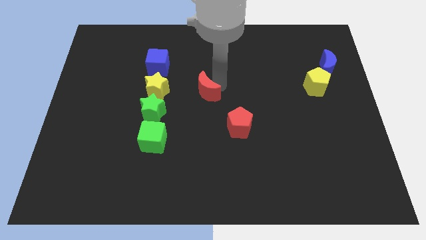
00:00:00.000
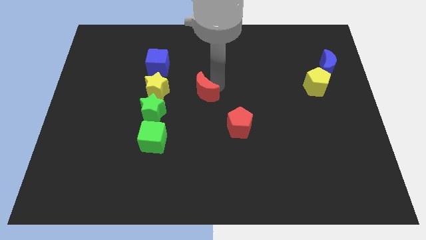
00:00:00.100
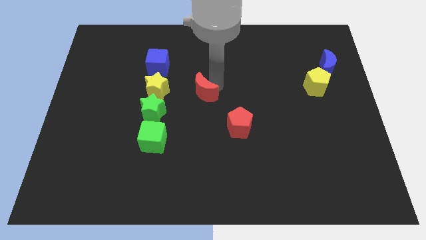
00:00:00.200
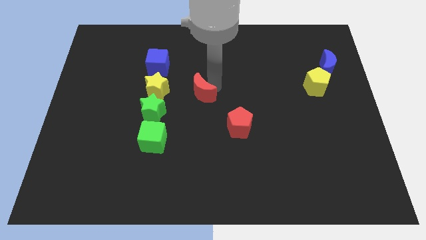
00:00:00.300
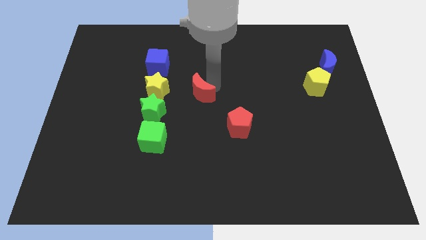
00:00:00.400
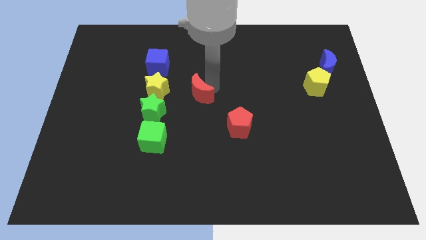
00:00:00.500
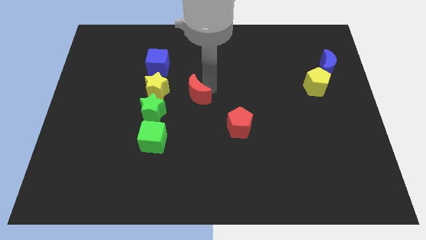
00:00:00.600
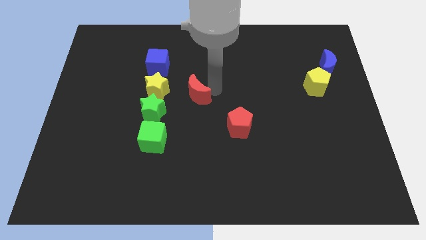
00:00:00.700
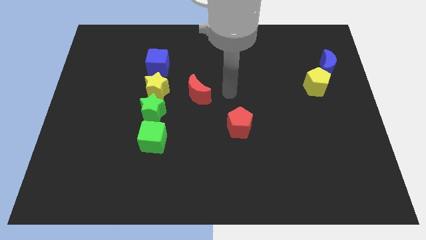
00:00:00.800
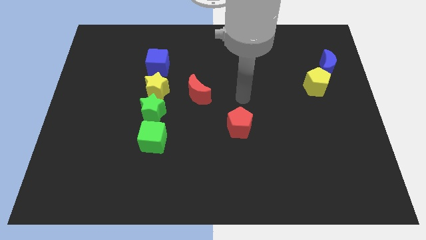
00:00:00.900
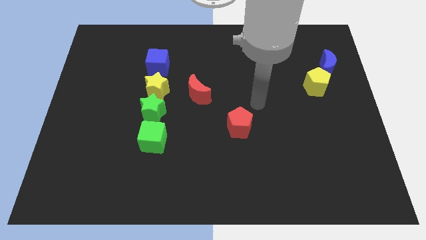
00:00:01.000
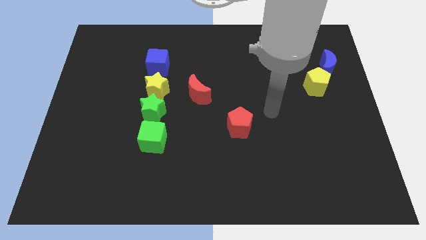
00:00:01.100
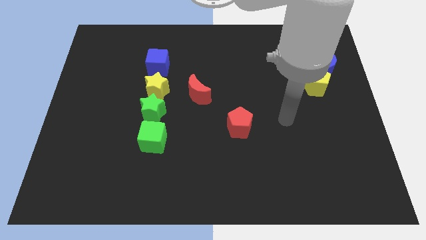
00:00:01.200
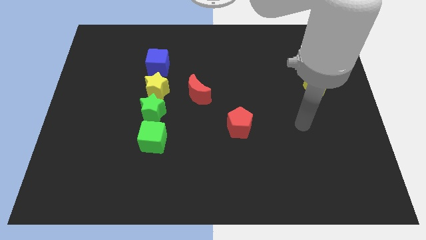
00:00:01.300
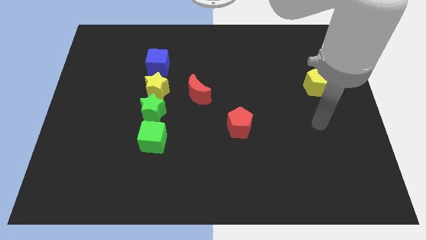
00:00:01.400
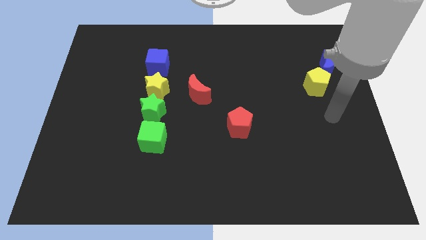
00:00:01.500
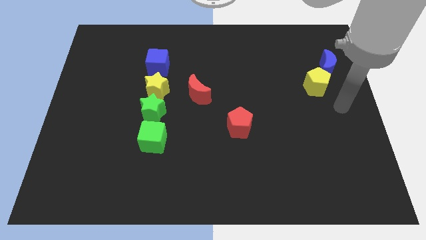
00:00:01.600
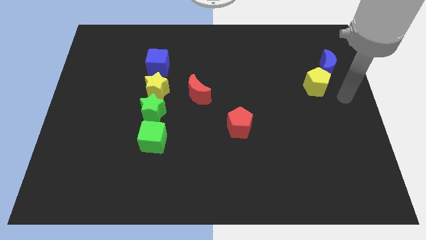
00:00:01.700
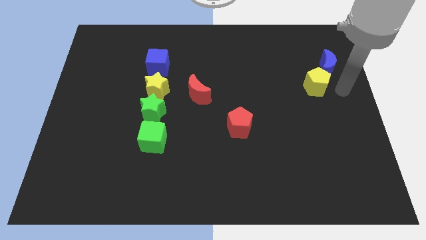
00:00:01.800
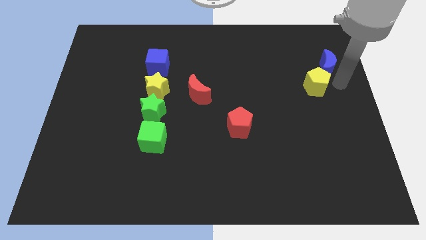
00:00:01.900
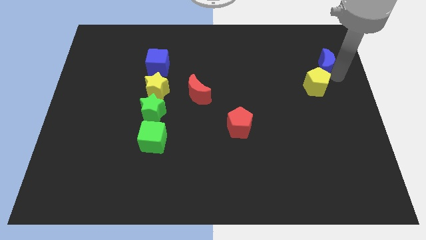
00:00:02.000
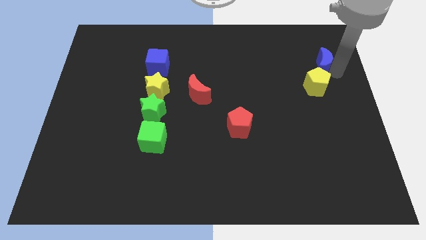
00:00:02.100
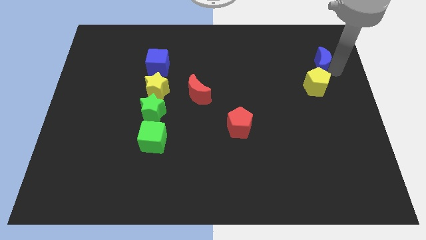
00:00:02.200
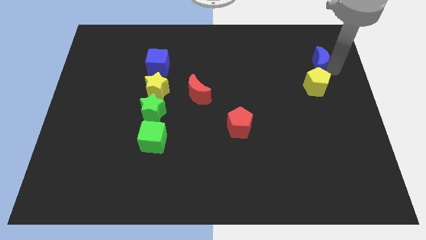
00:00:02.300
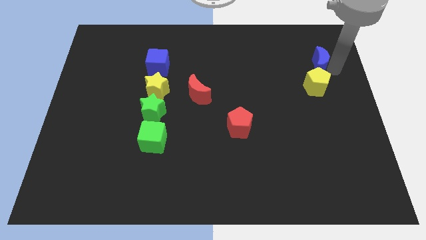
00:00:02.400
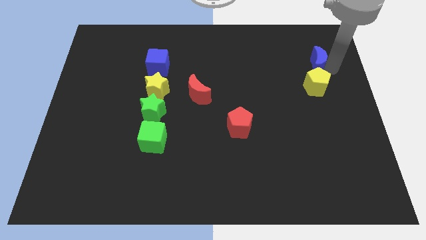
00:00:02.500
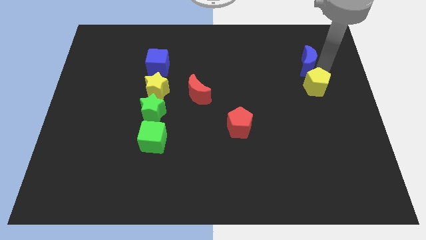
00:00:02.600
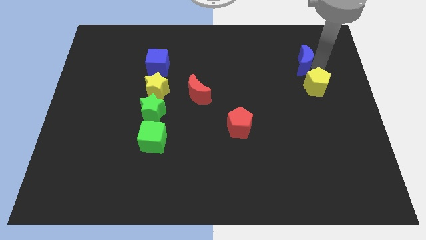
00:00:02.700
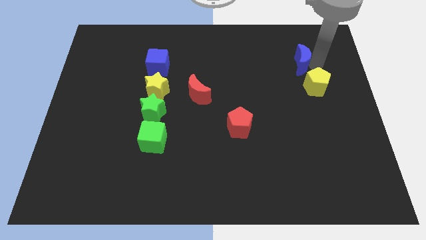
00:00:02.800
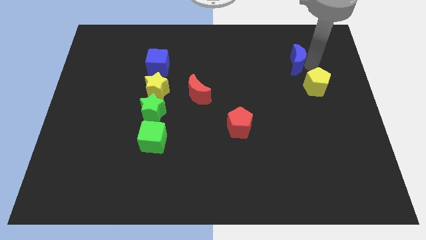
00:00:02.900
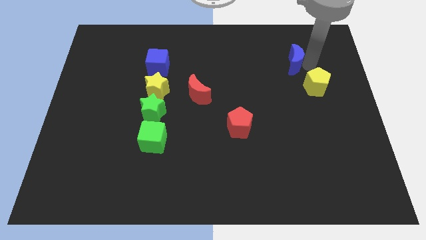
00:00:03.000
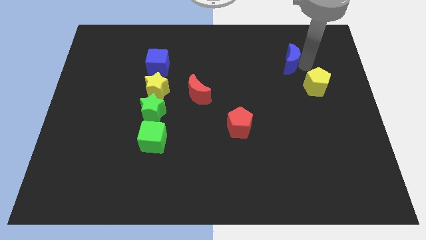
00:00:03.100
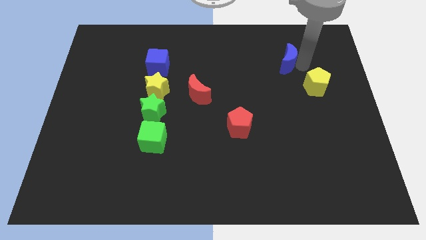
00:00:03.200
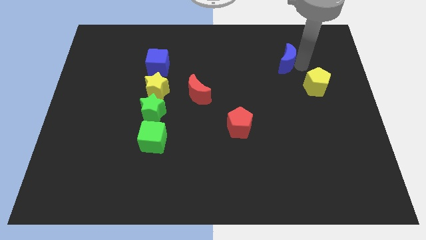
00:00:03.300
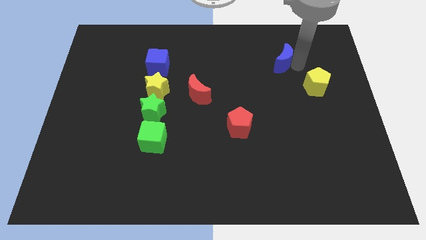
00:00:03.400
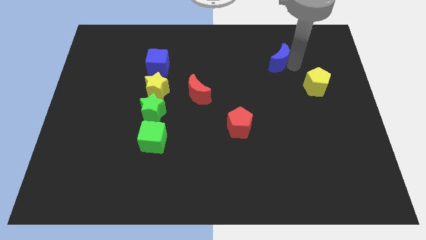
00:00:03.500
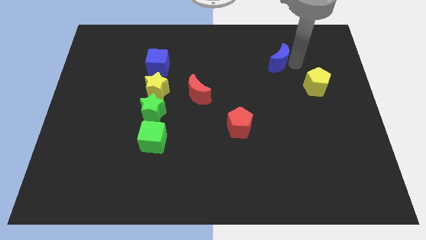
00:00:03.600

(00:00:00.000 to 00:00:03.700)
separate the blue crescent from the yellow pentagon

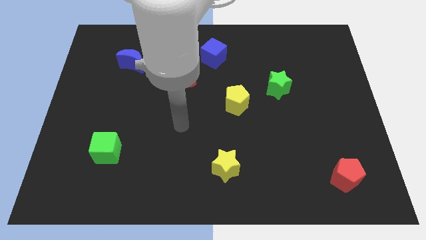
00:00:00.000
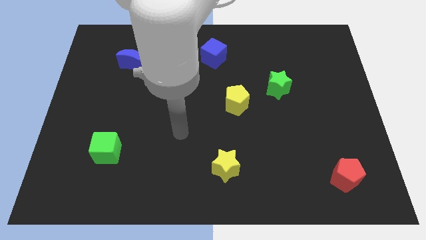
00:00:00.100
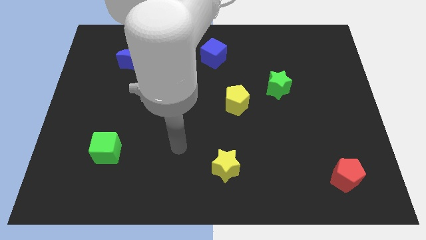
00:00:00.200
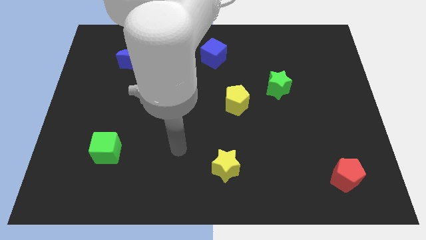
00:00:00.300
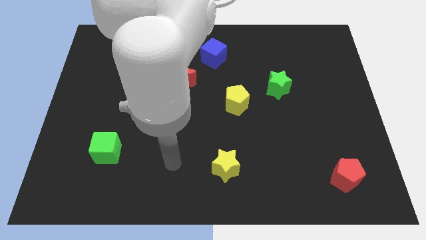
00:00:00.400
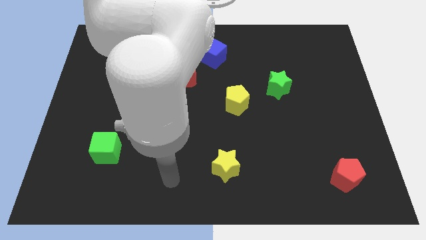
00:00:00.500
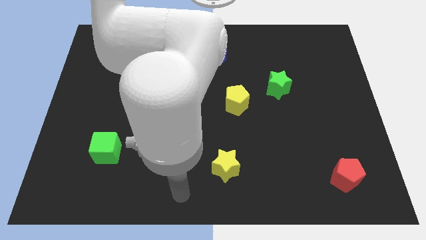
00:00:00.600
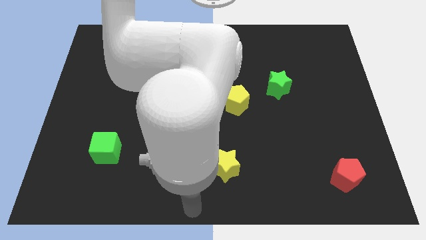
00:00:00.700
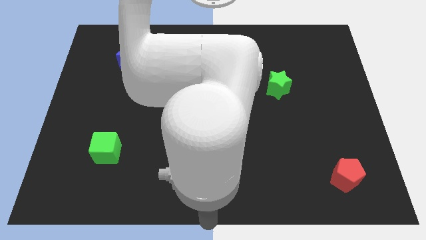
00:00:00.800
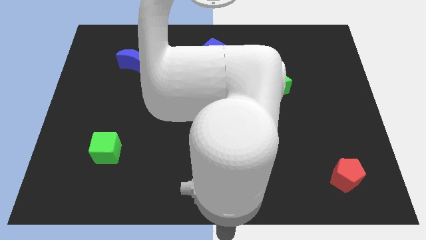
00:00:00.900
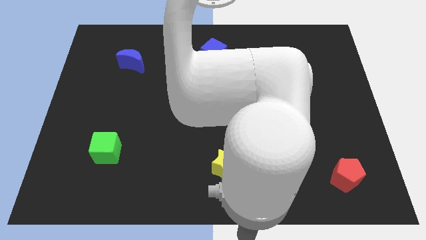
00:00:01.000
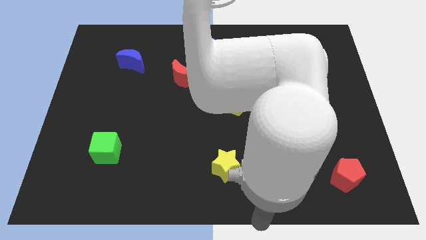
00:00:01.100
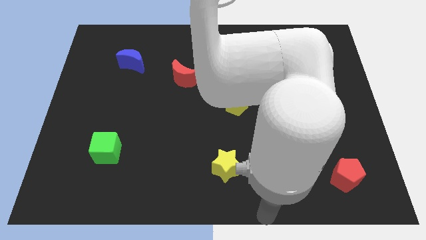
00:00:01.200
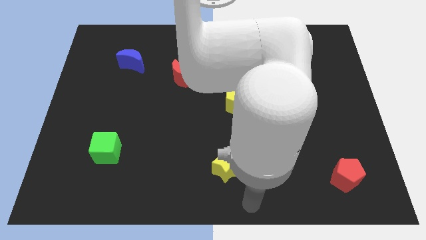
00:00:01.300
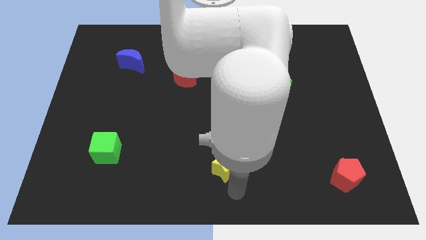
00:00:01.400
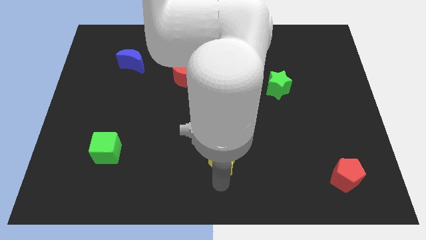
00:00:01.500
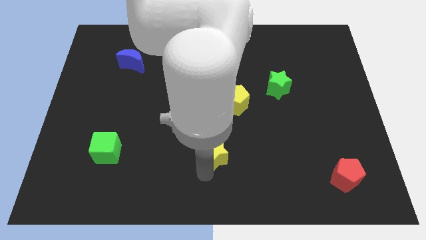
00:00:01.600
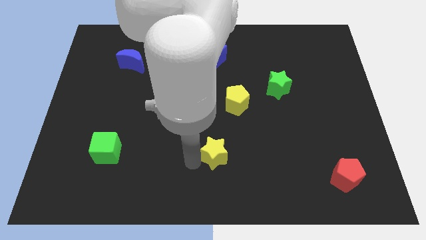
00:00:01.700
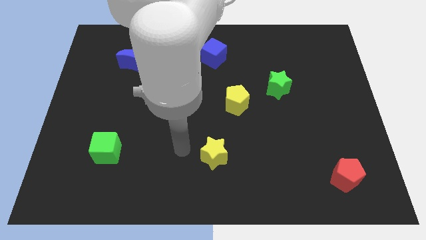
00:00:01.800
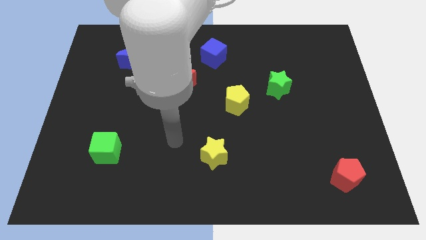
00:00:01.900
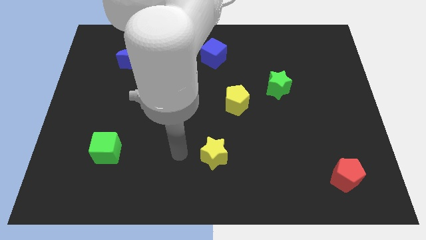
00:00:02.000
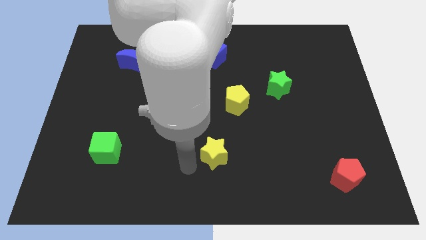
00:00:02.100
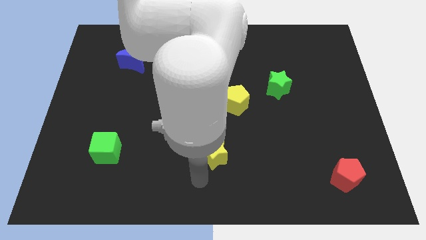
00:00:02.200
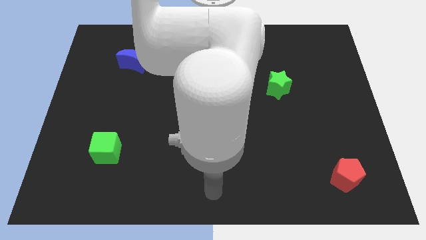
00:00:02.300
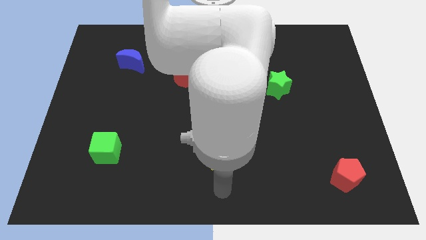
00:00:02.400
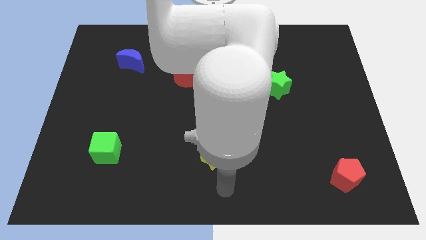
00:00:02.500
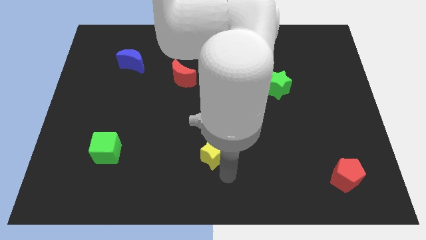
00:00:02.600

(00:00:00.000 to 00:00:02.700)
slightly push the yellow star towards the centre

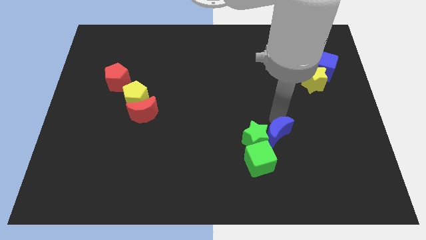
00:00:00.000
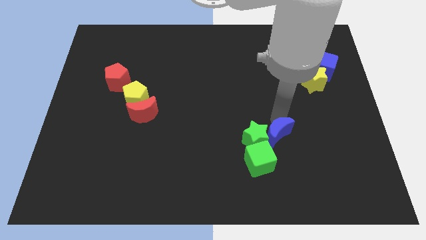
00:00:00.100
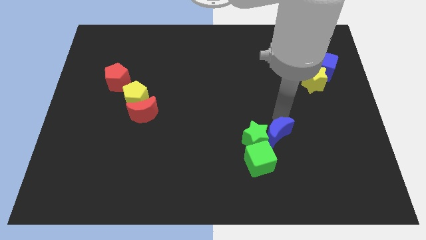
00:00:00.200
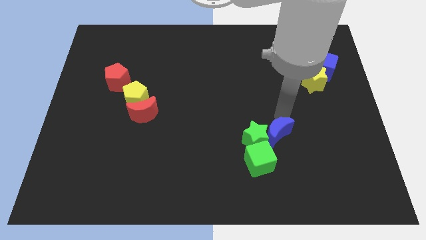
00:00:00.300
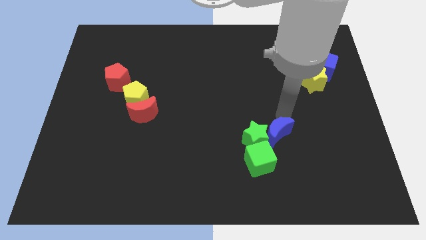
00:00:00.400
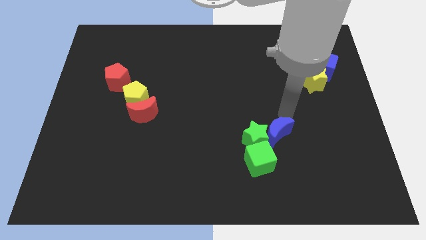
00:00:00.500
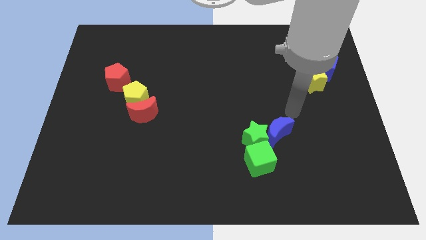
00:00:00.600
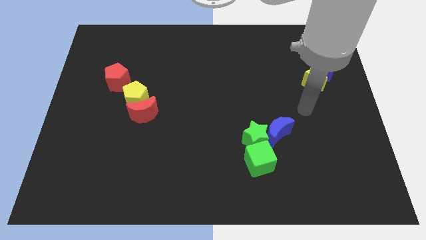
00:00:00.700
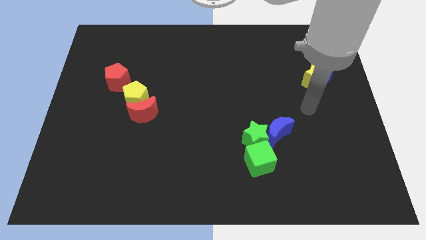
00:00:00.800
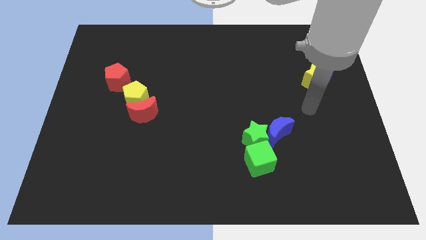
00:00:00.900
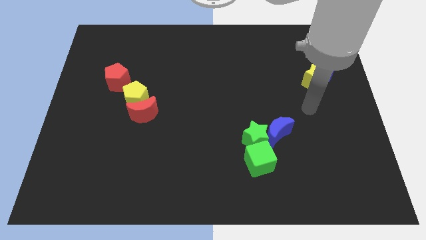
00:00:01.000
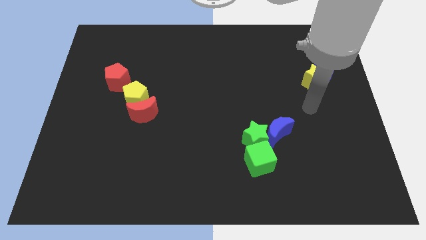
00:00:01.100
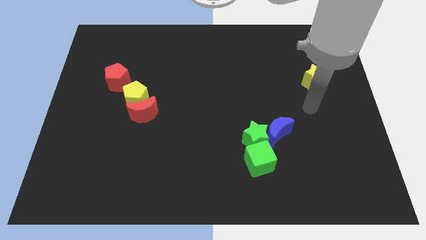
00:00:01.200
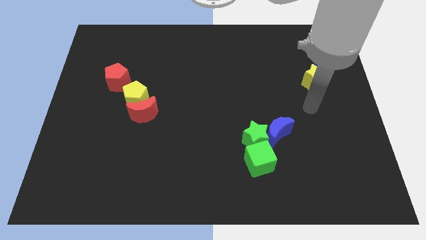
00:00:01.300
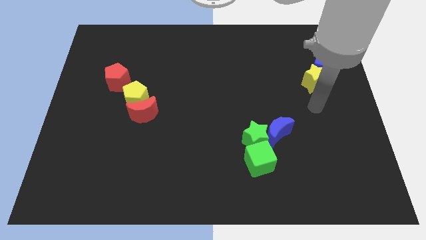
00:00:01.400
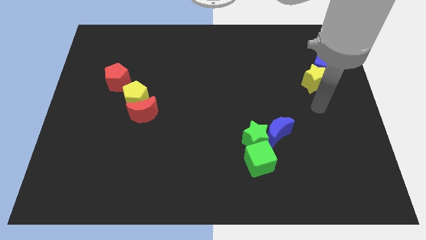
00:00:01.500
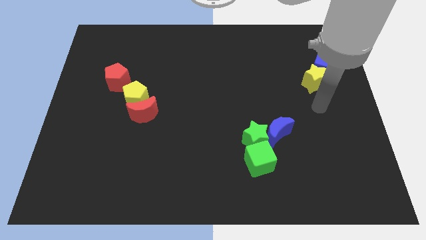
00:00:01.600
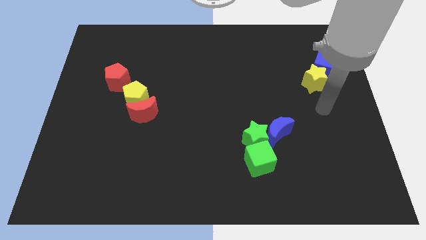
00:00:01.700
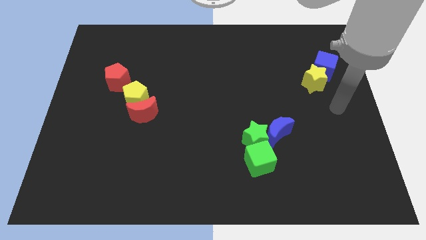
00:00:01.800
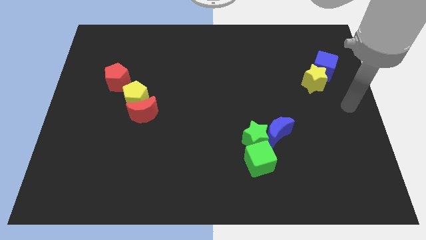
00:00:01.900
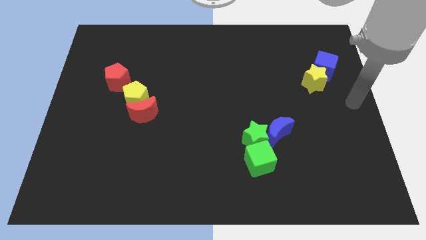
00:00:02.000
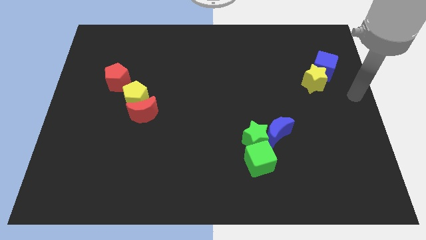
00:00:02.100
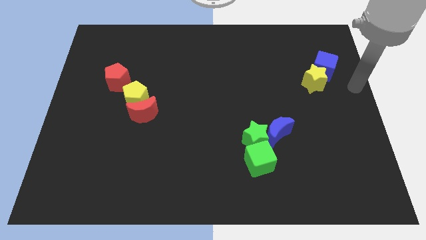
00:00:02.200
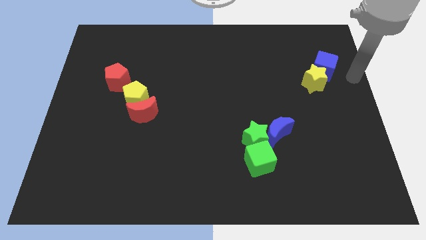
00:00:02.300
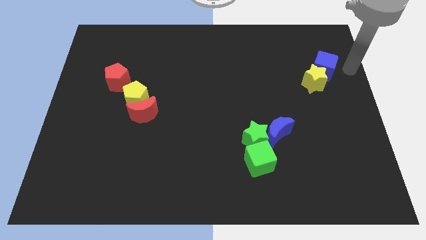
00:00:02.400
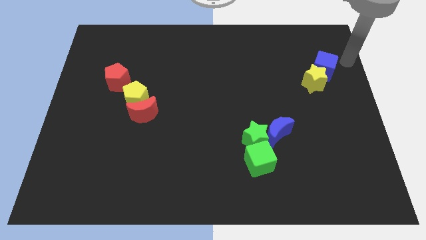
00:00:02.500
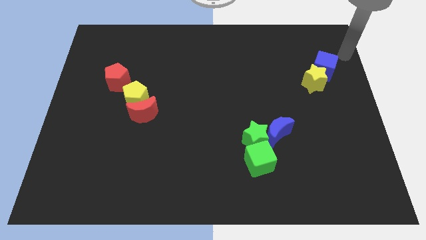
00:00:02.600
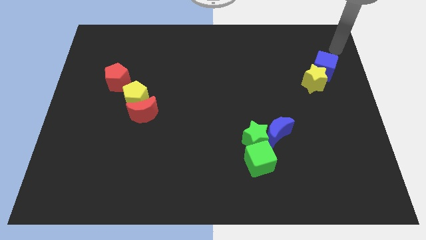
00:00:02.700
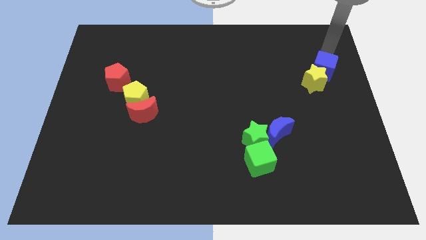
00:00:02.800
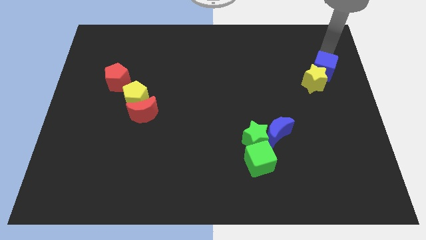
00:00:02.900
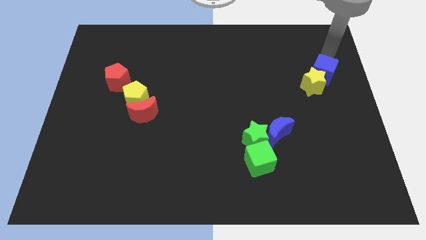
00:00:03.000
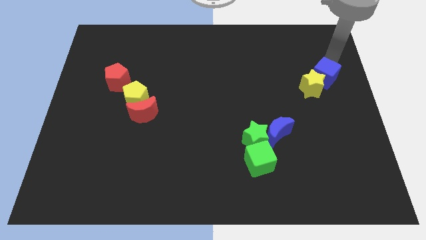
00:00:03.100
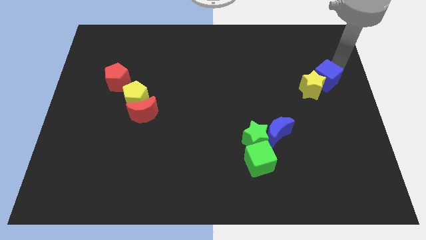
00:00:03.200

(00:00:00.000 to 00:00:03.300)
go and tap the top side of the blue cube
